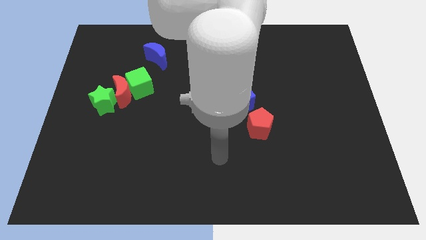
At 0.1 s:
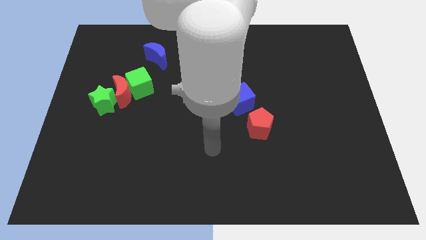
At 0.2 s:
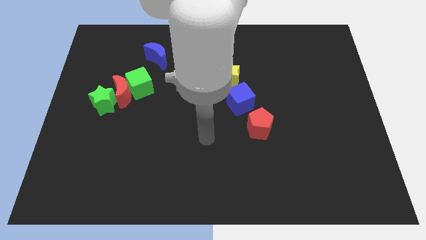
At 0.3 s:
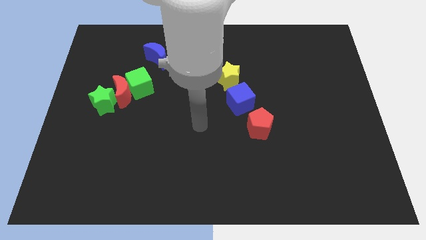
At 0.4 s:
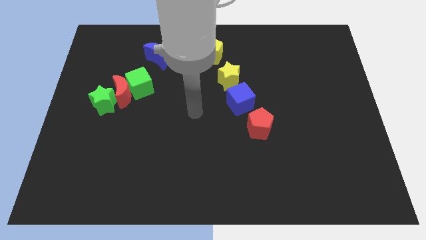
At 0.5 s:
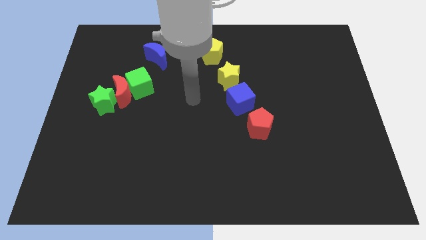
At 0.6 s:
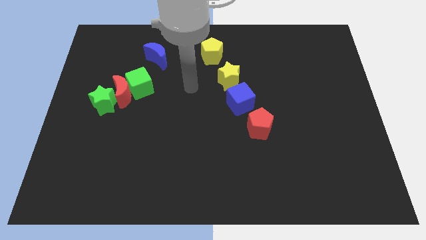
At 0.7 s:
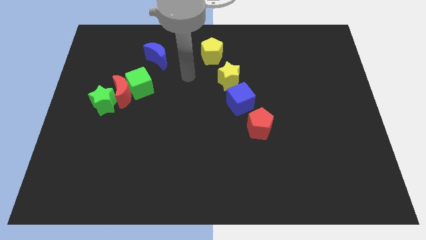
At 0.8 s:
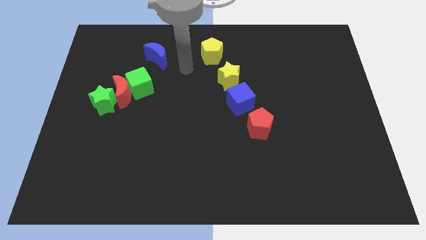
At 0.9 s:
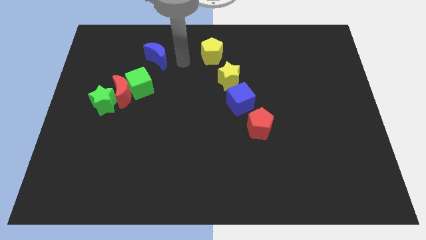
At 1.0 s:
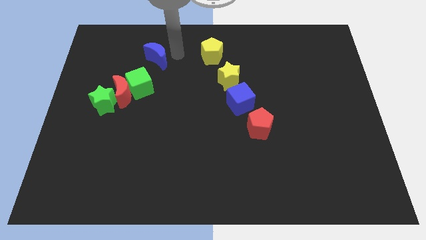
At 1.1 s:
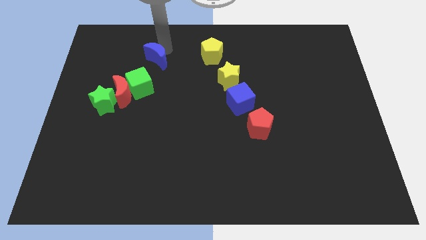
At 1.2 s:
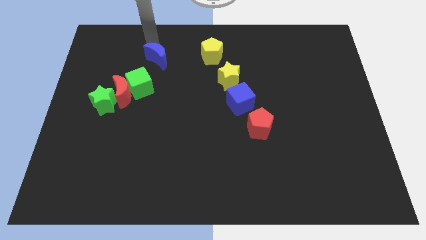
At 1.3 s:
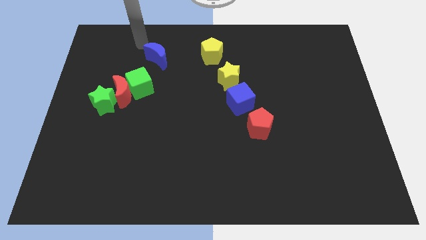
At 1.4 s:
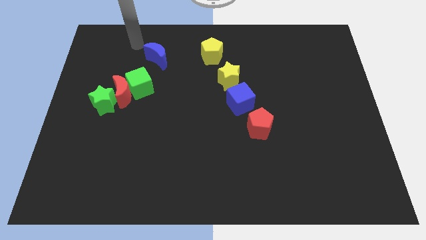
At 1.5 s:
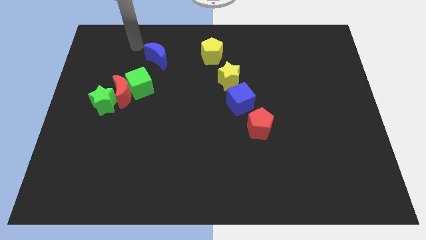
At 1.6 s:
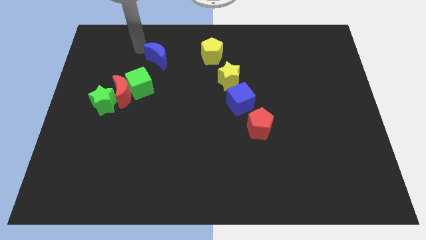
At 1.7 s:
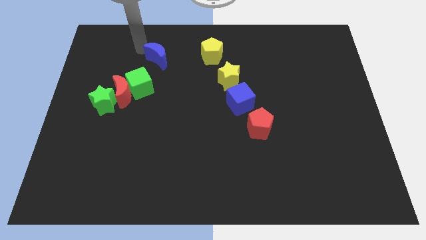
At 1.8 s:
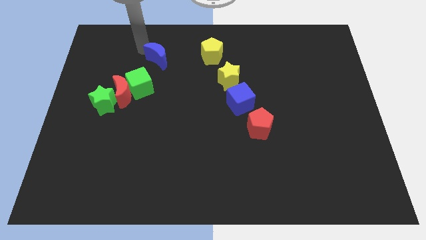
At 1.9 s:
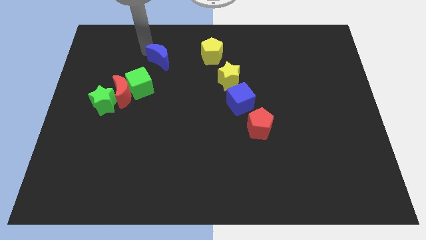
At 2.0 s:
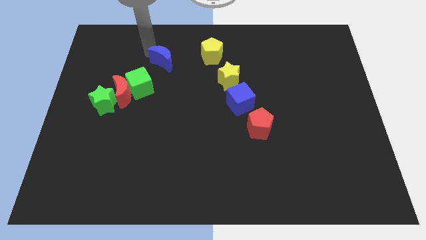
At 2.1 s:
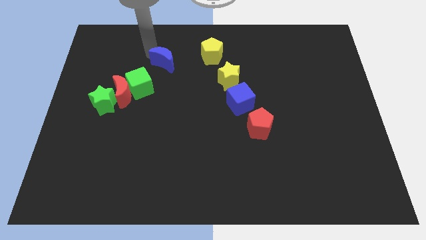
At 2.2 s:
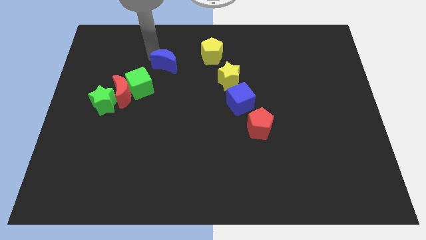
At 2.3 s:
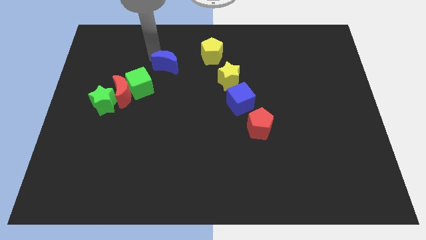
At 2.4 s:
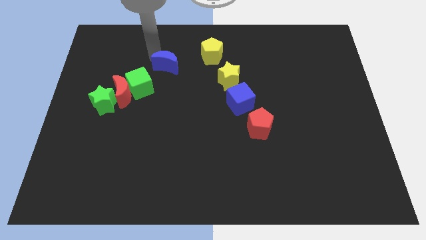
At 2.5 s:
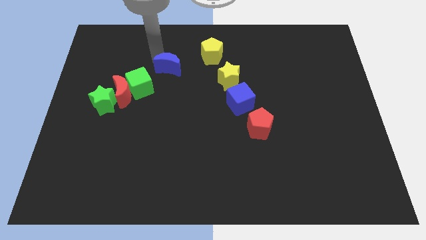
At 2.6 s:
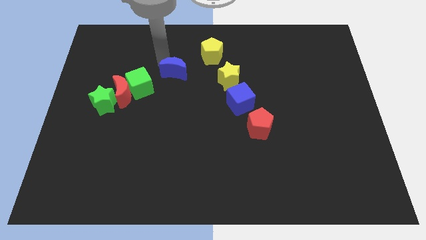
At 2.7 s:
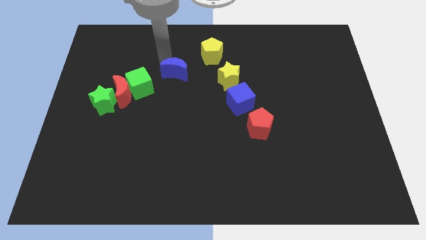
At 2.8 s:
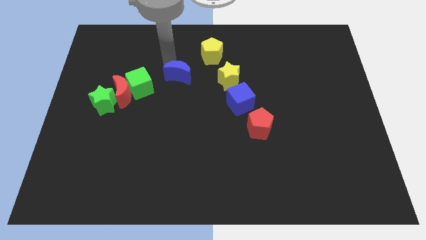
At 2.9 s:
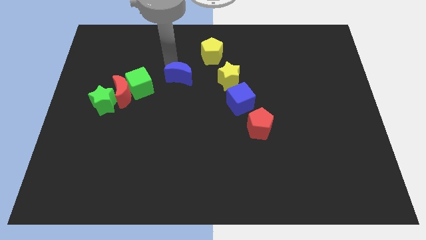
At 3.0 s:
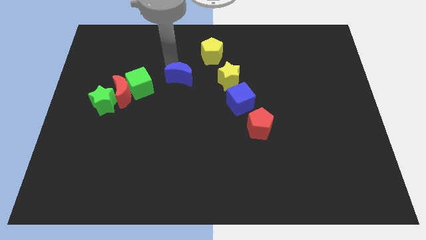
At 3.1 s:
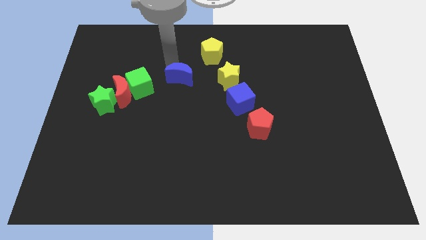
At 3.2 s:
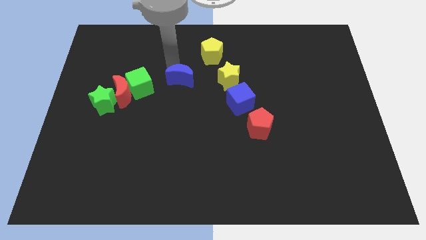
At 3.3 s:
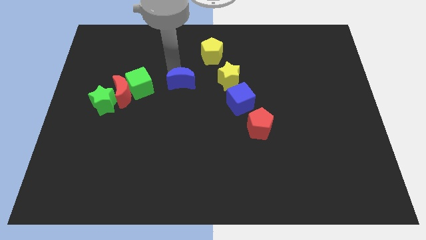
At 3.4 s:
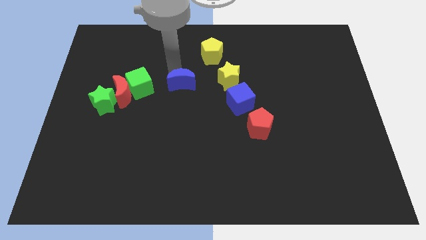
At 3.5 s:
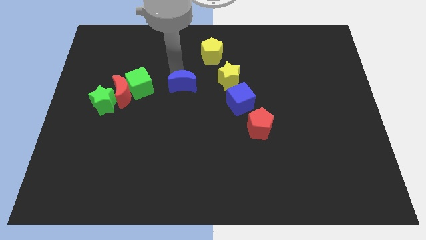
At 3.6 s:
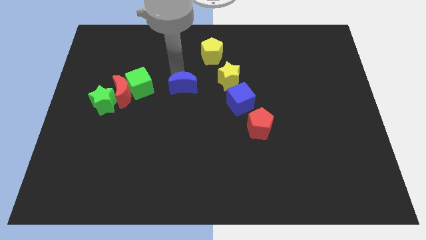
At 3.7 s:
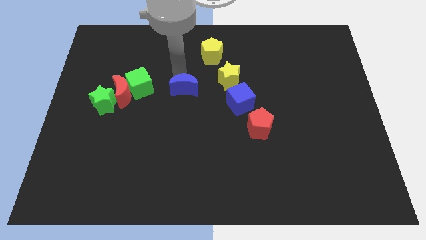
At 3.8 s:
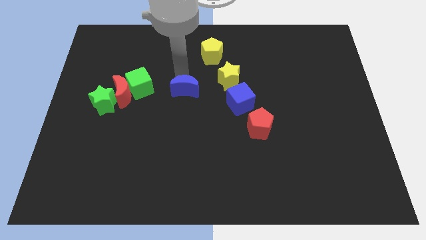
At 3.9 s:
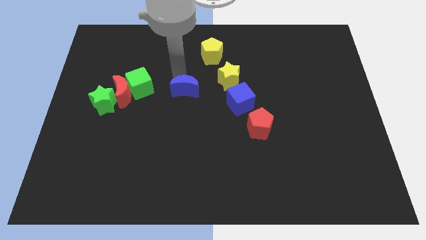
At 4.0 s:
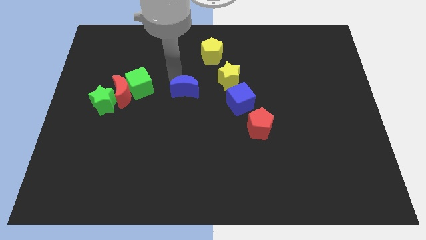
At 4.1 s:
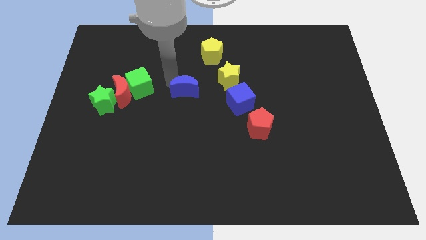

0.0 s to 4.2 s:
put the blue moon in between the green cube and yellow star

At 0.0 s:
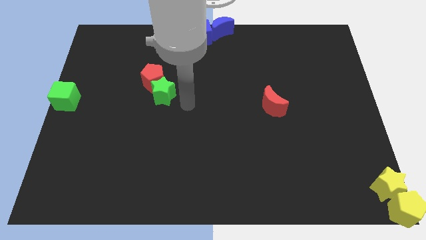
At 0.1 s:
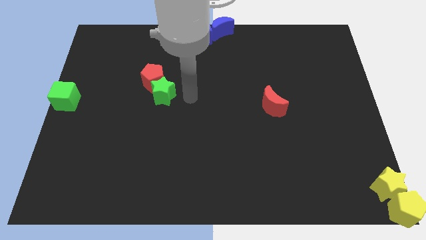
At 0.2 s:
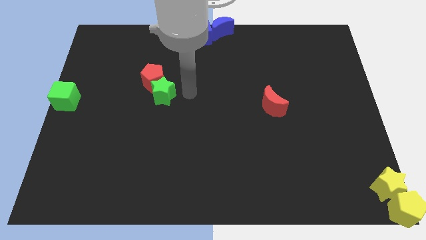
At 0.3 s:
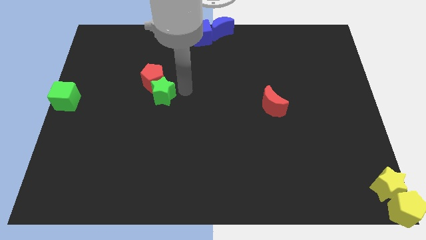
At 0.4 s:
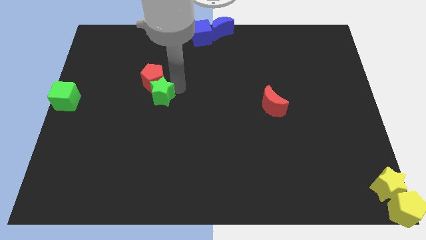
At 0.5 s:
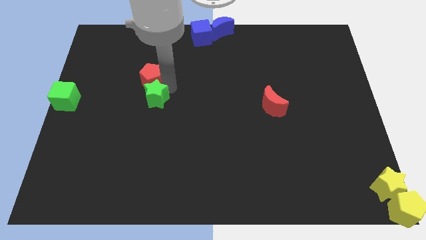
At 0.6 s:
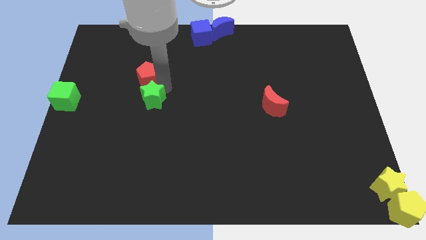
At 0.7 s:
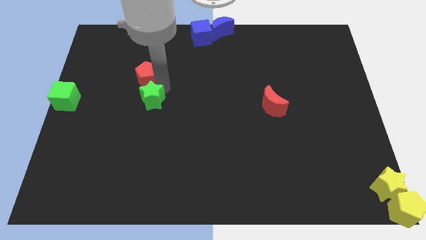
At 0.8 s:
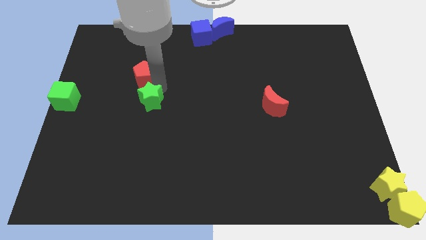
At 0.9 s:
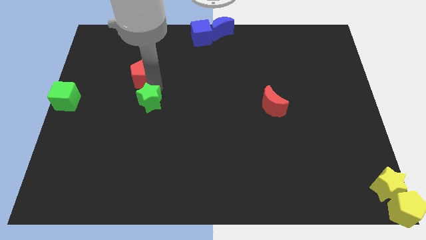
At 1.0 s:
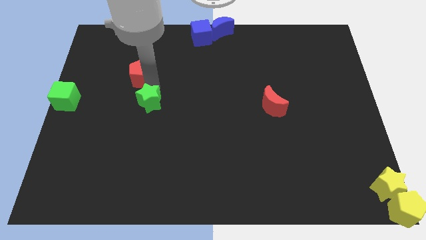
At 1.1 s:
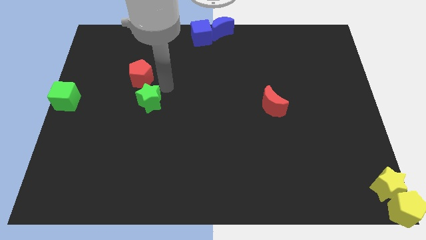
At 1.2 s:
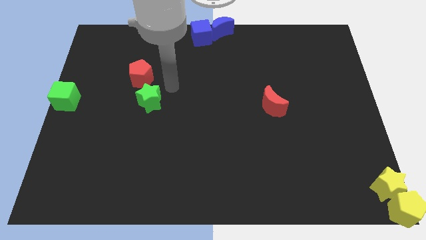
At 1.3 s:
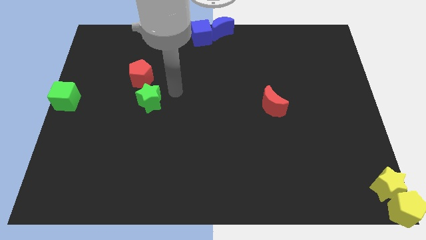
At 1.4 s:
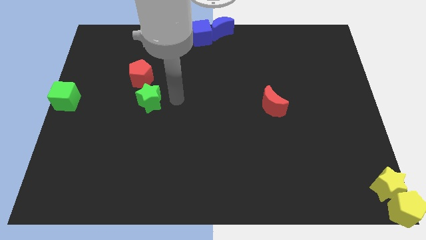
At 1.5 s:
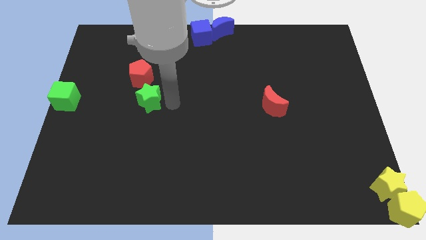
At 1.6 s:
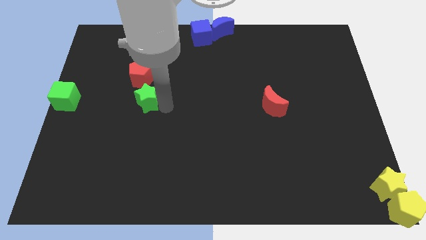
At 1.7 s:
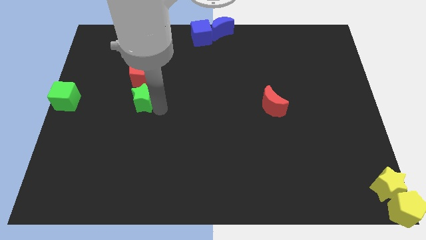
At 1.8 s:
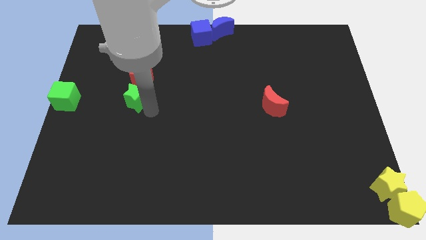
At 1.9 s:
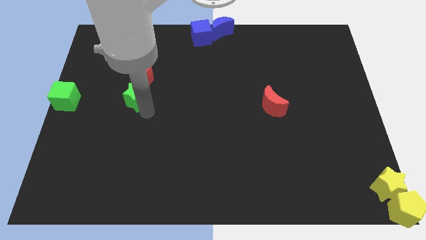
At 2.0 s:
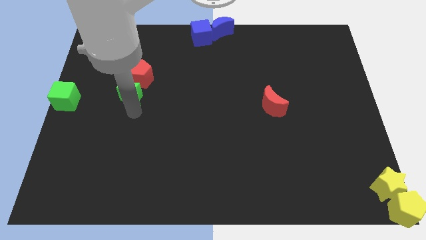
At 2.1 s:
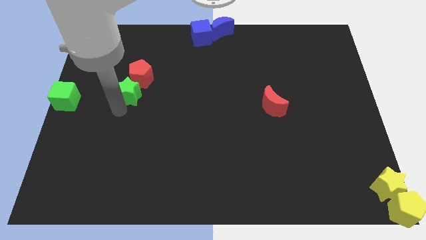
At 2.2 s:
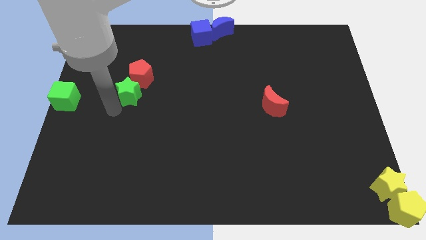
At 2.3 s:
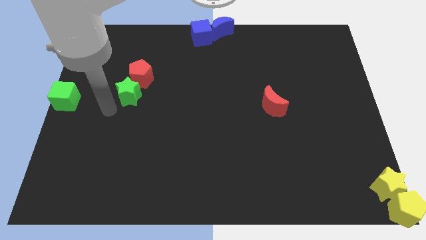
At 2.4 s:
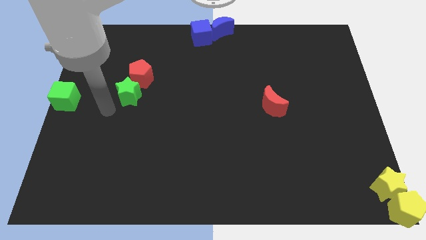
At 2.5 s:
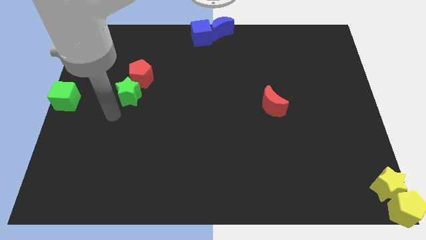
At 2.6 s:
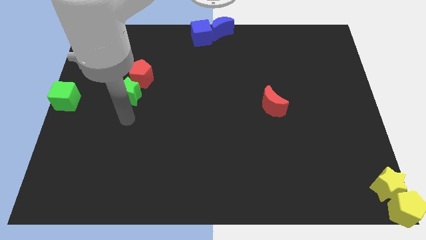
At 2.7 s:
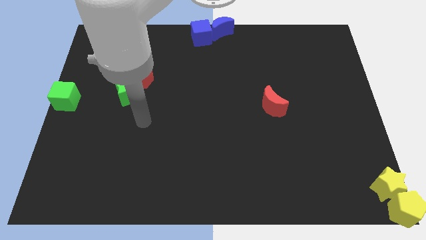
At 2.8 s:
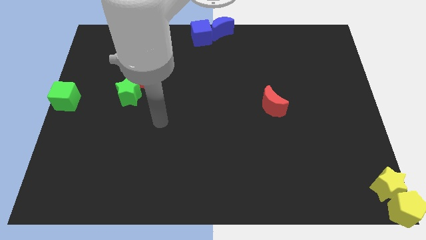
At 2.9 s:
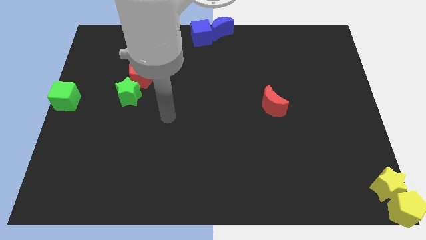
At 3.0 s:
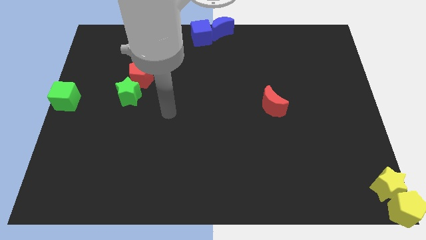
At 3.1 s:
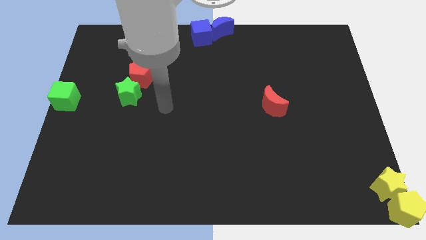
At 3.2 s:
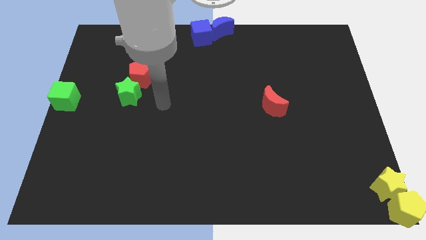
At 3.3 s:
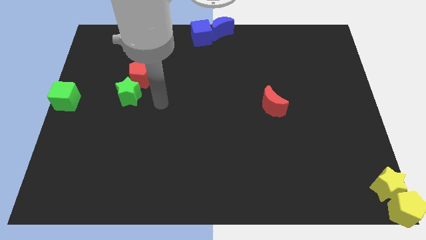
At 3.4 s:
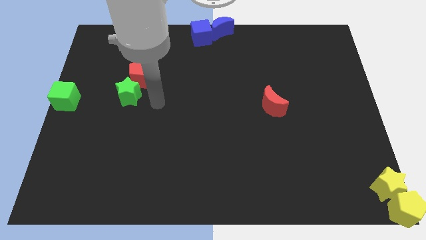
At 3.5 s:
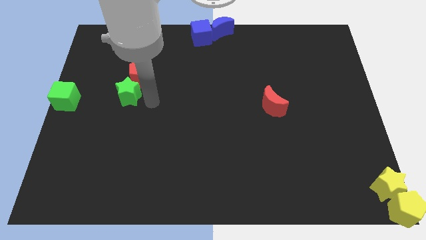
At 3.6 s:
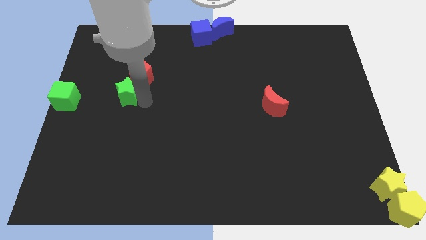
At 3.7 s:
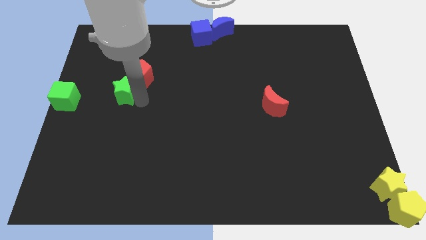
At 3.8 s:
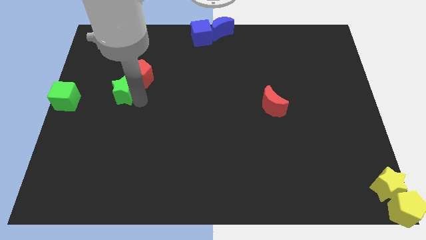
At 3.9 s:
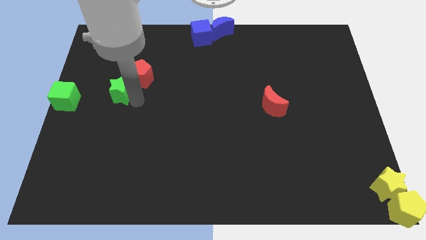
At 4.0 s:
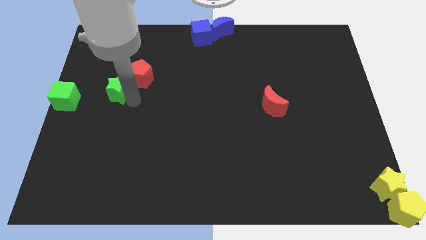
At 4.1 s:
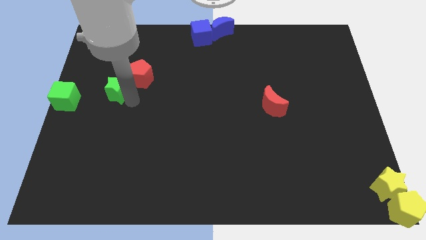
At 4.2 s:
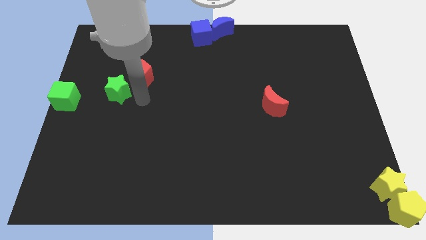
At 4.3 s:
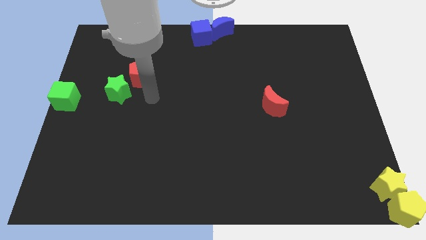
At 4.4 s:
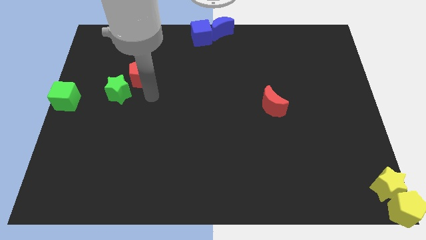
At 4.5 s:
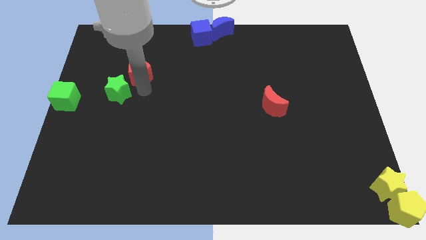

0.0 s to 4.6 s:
move green star to the bottom left of red pentagon
